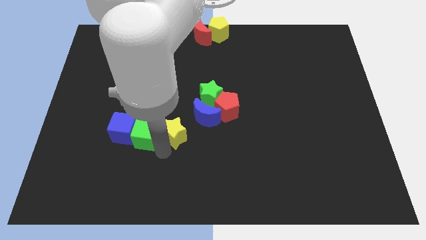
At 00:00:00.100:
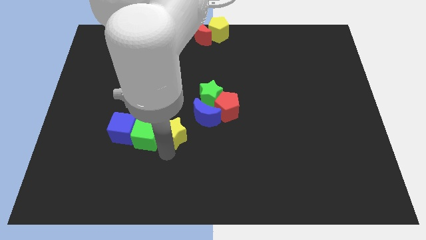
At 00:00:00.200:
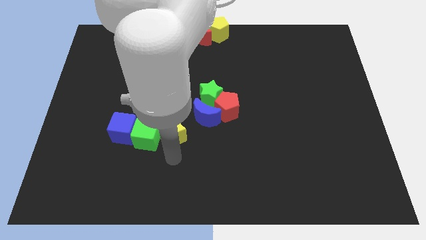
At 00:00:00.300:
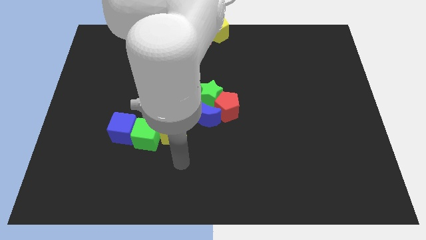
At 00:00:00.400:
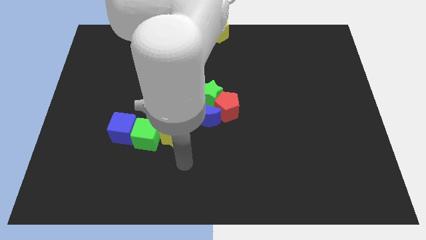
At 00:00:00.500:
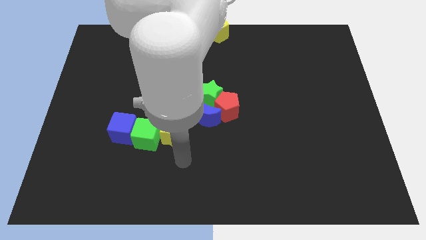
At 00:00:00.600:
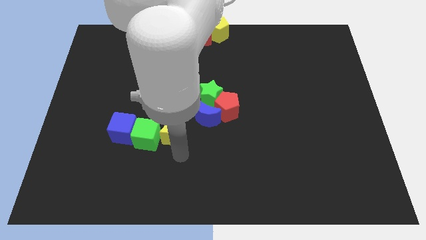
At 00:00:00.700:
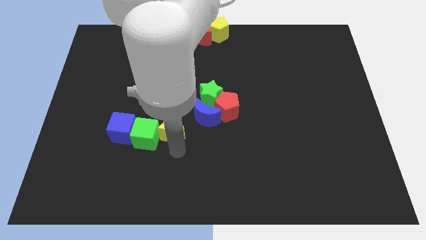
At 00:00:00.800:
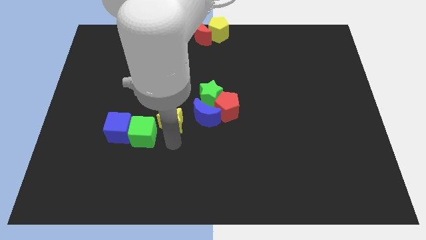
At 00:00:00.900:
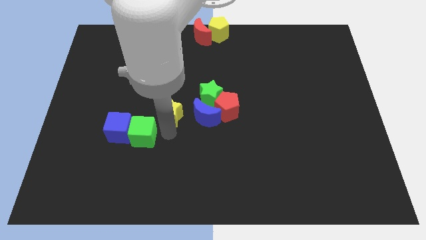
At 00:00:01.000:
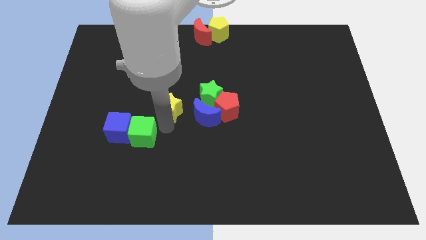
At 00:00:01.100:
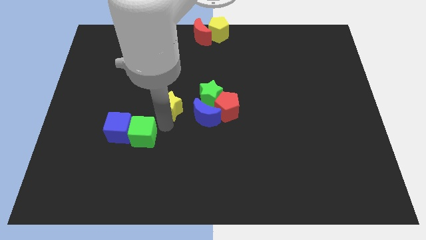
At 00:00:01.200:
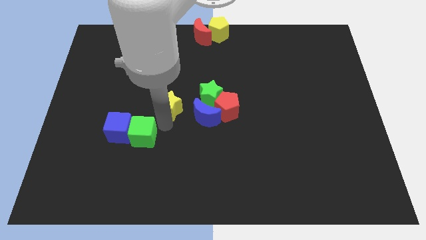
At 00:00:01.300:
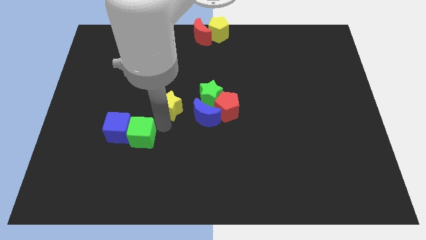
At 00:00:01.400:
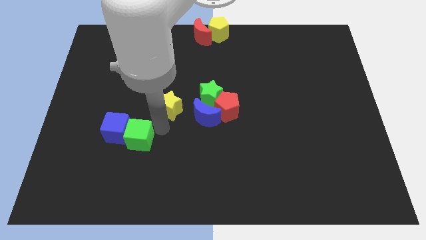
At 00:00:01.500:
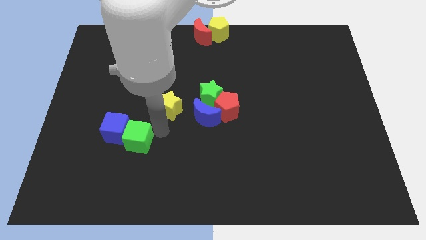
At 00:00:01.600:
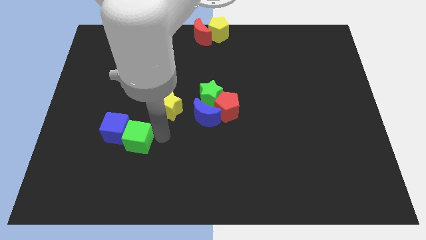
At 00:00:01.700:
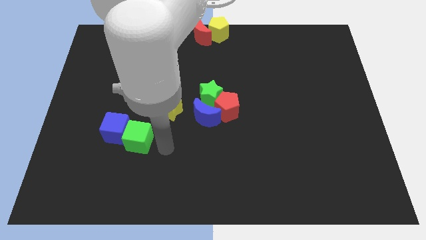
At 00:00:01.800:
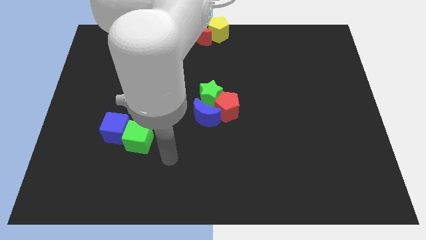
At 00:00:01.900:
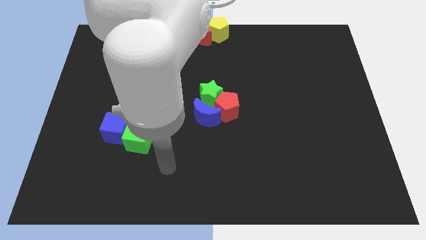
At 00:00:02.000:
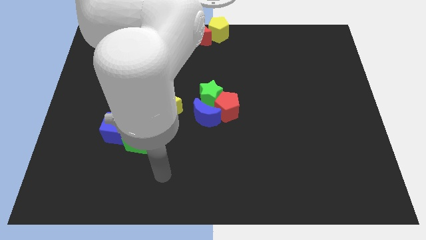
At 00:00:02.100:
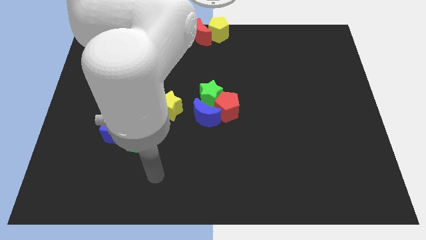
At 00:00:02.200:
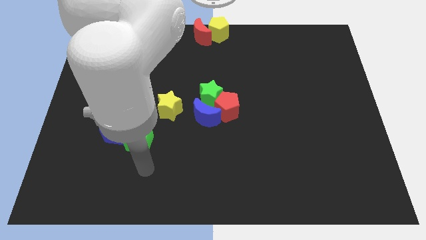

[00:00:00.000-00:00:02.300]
push yellow star slightly upwards

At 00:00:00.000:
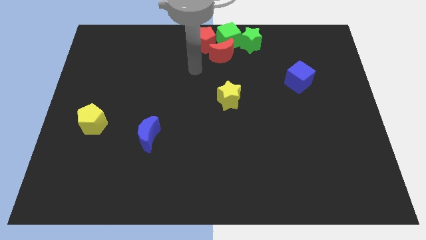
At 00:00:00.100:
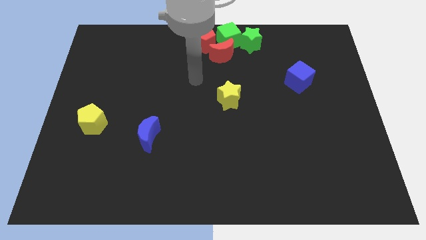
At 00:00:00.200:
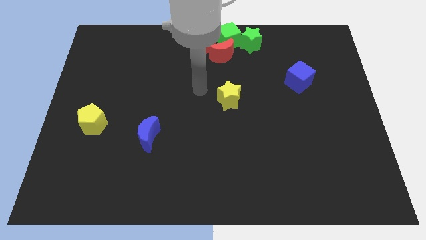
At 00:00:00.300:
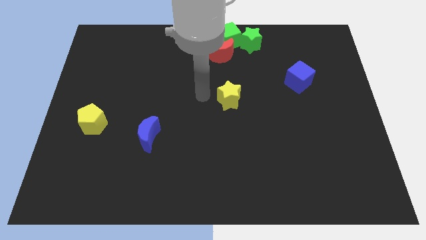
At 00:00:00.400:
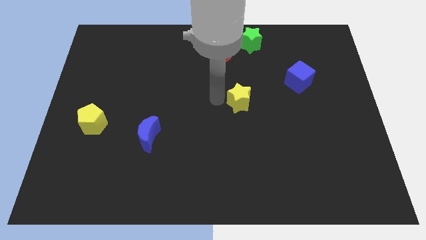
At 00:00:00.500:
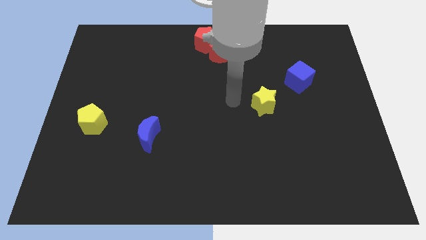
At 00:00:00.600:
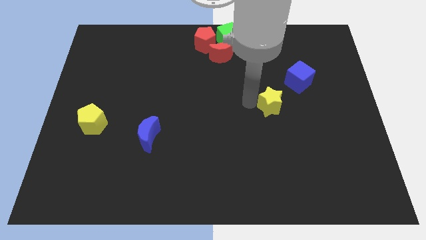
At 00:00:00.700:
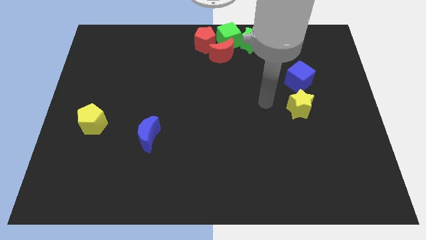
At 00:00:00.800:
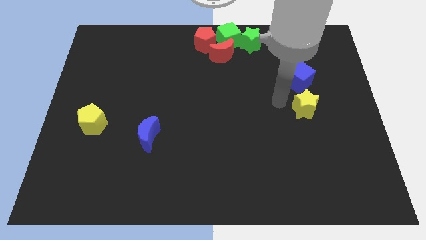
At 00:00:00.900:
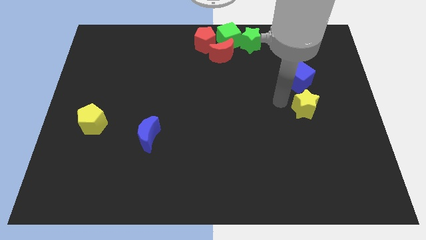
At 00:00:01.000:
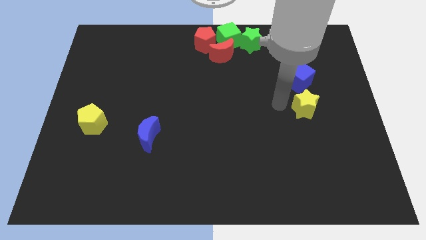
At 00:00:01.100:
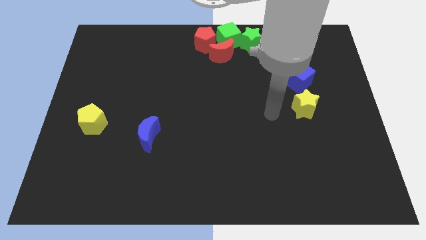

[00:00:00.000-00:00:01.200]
move yellow star below the blue cube

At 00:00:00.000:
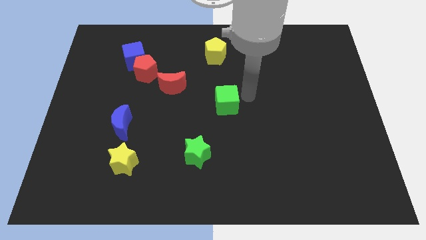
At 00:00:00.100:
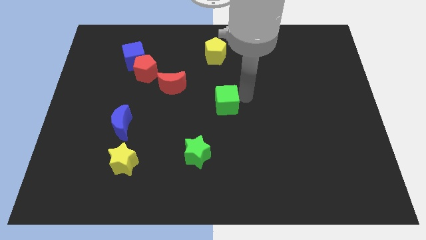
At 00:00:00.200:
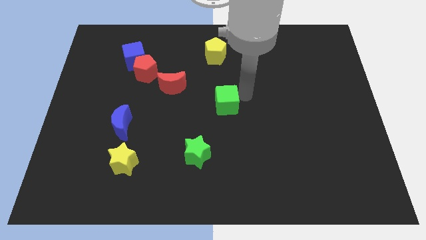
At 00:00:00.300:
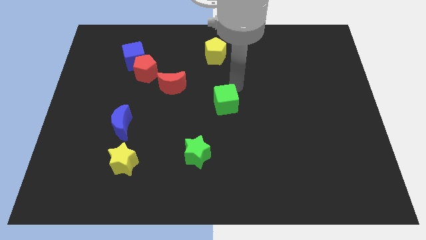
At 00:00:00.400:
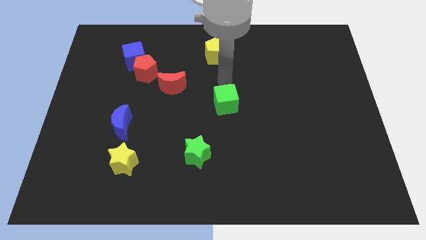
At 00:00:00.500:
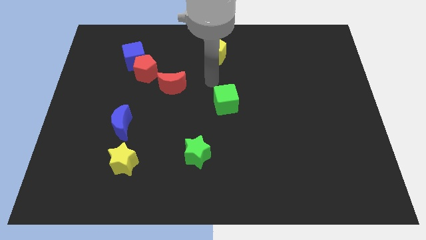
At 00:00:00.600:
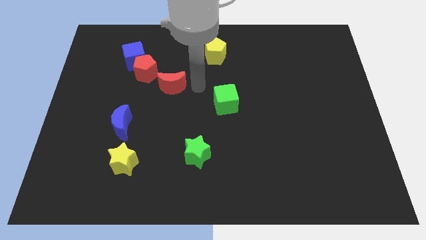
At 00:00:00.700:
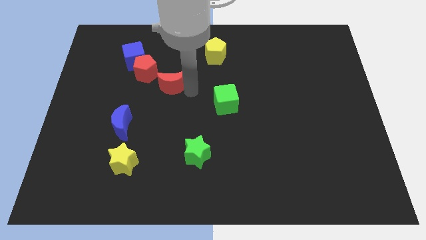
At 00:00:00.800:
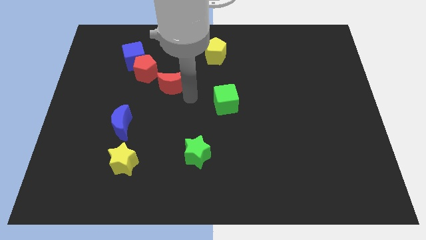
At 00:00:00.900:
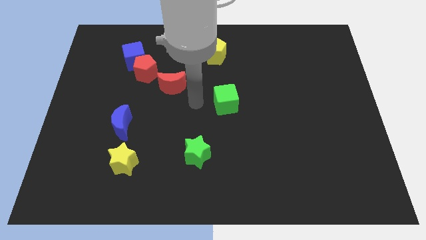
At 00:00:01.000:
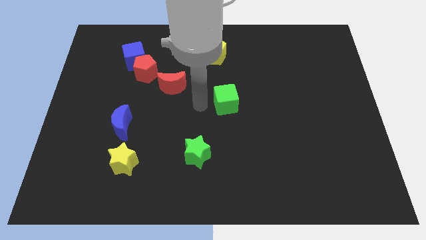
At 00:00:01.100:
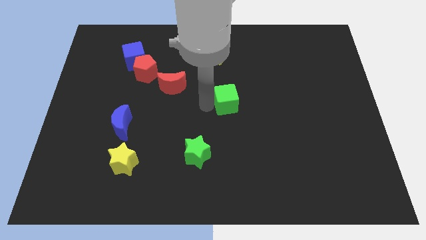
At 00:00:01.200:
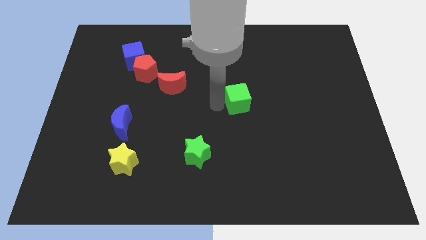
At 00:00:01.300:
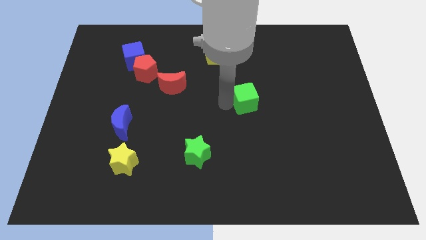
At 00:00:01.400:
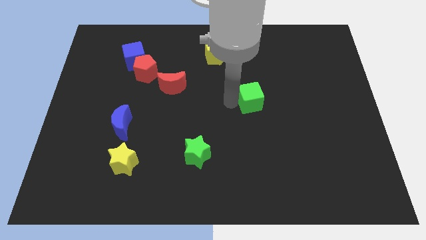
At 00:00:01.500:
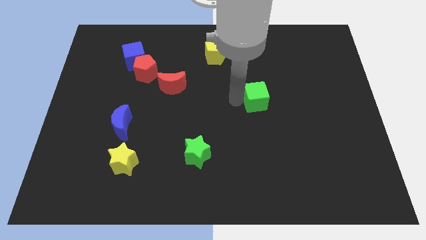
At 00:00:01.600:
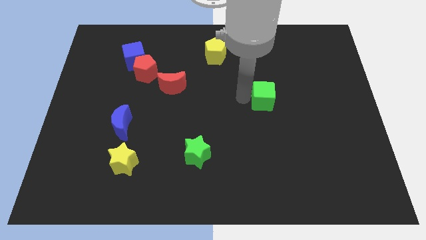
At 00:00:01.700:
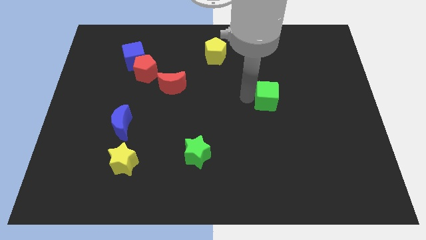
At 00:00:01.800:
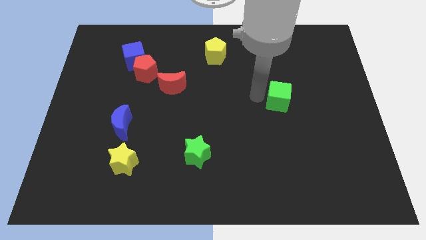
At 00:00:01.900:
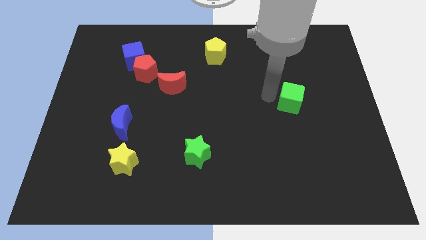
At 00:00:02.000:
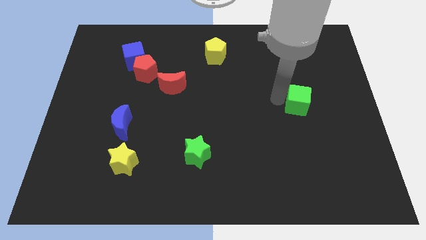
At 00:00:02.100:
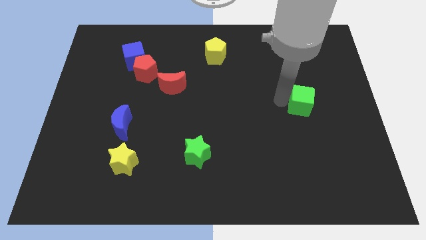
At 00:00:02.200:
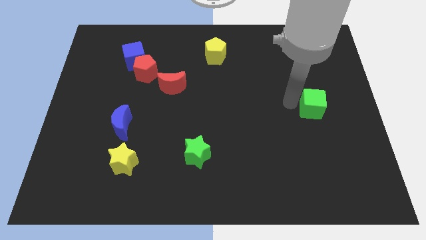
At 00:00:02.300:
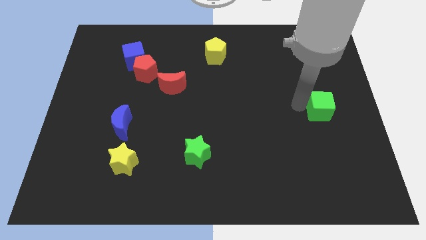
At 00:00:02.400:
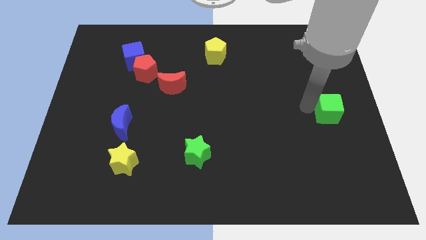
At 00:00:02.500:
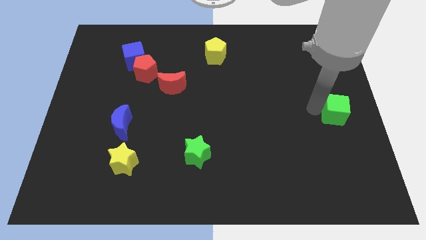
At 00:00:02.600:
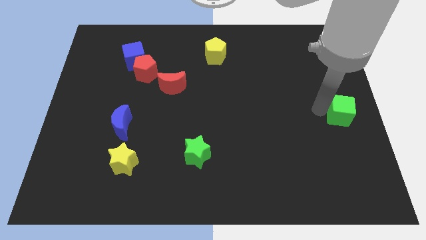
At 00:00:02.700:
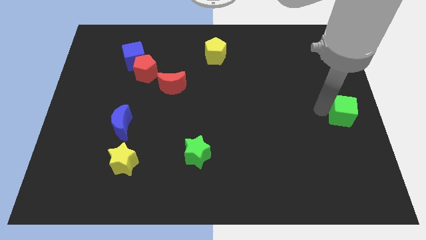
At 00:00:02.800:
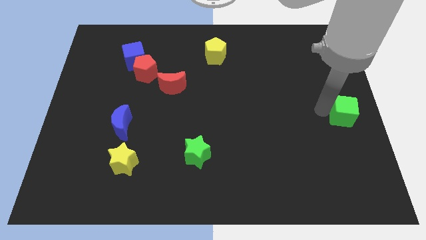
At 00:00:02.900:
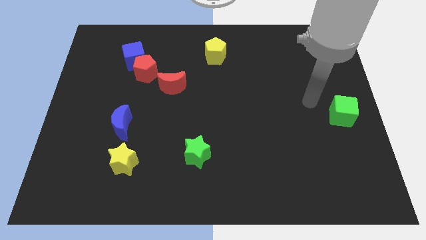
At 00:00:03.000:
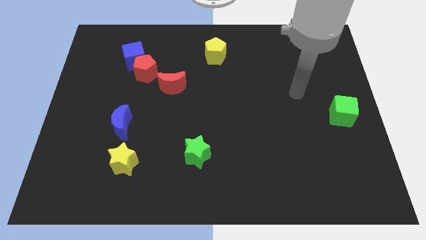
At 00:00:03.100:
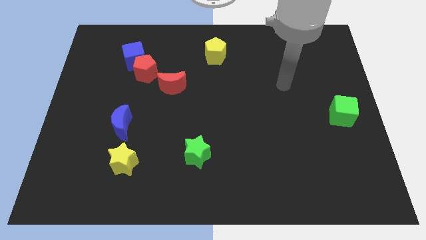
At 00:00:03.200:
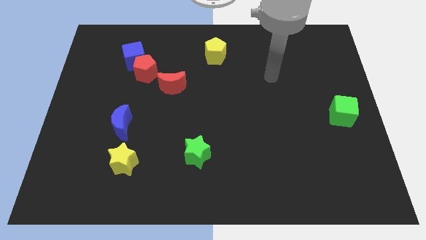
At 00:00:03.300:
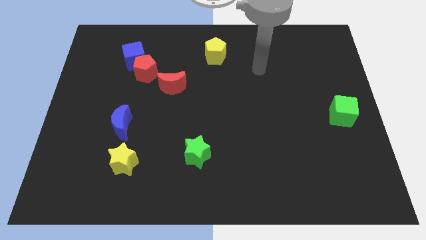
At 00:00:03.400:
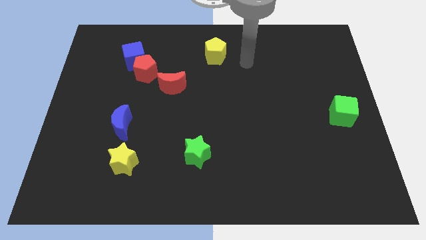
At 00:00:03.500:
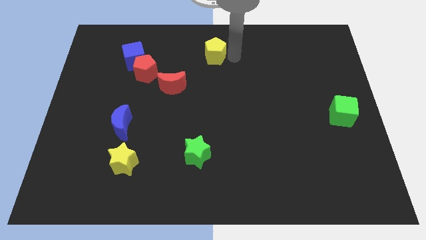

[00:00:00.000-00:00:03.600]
drag the green cube to the right

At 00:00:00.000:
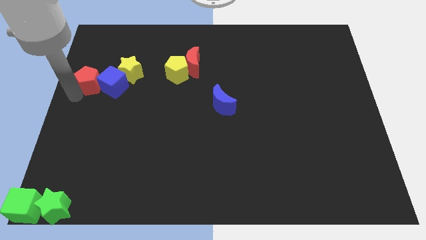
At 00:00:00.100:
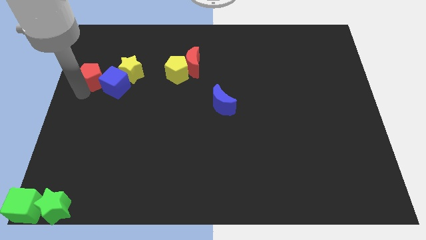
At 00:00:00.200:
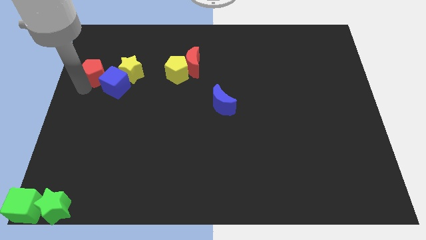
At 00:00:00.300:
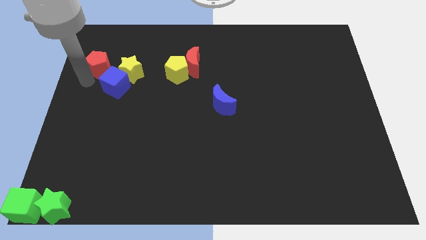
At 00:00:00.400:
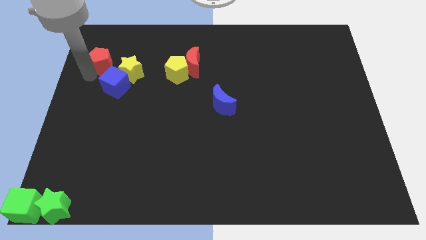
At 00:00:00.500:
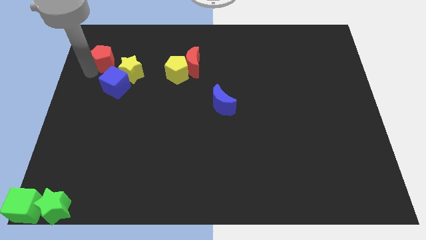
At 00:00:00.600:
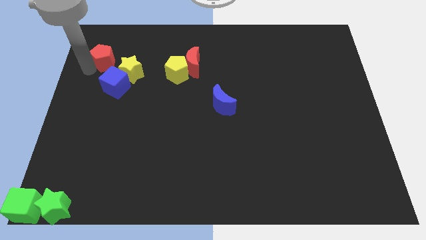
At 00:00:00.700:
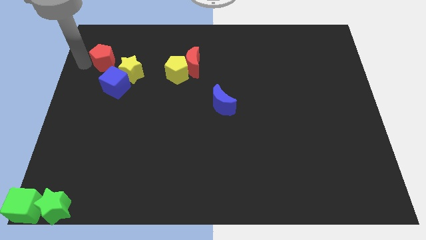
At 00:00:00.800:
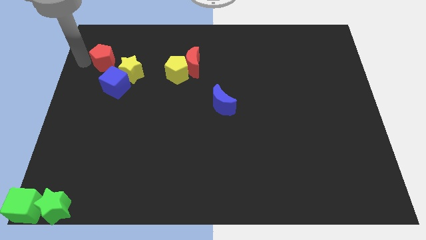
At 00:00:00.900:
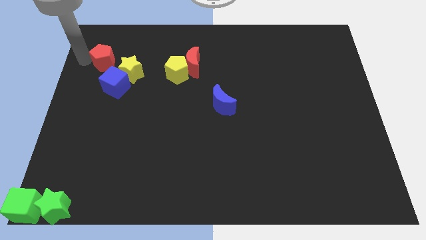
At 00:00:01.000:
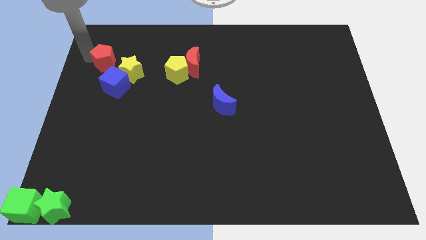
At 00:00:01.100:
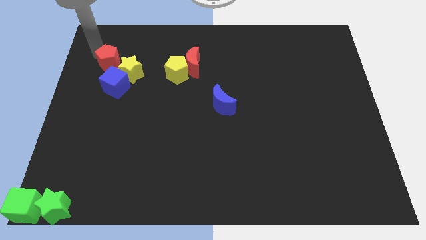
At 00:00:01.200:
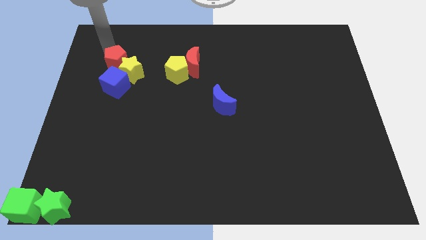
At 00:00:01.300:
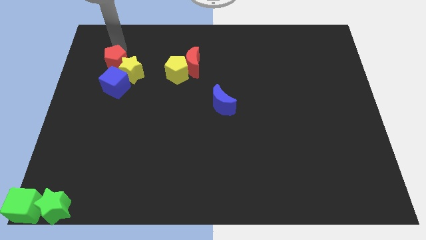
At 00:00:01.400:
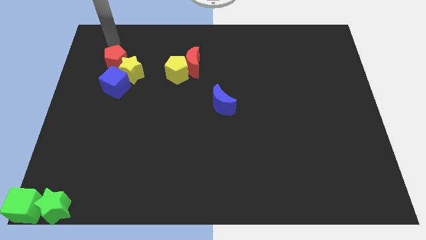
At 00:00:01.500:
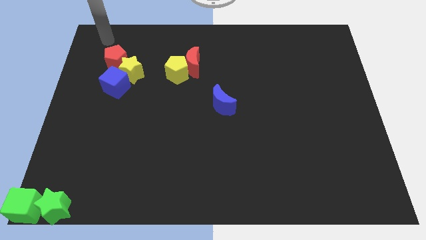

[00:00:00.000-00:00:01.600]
arrange the red pentagon on the top of the blue cube
